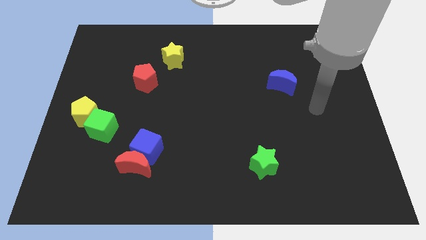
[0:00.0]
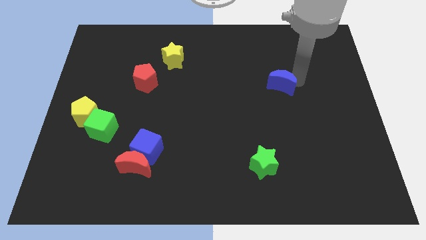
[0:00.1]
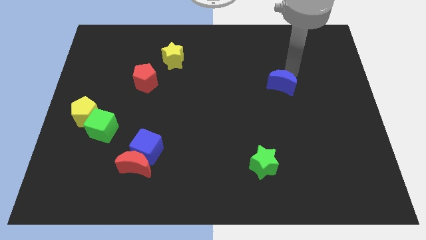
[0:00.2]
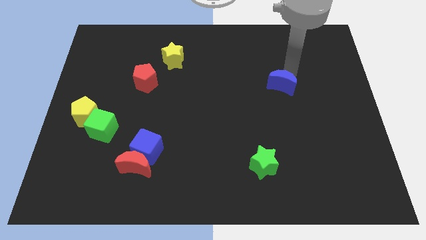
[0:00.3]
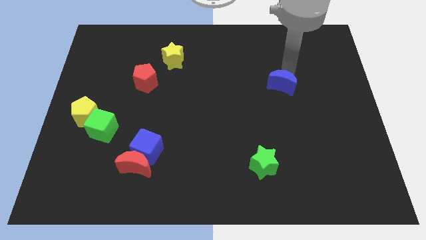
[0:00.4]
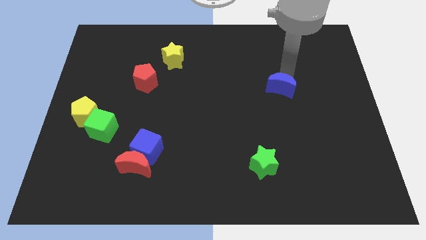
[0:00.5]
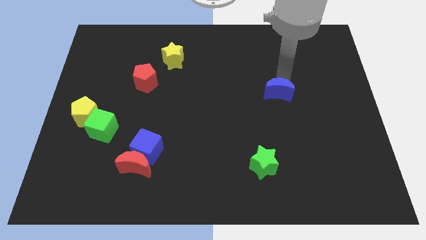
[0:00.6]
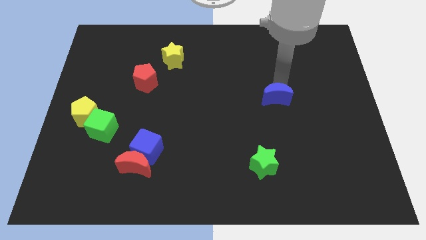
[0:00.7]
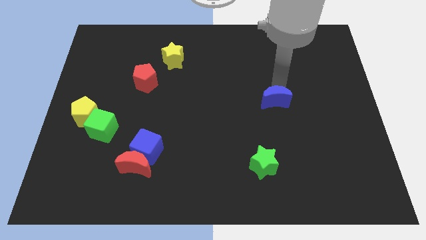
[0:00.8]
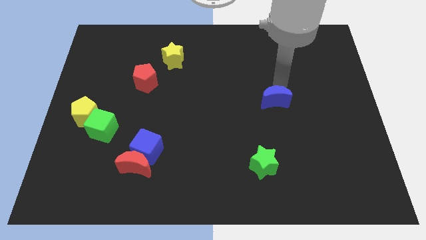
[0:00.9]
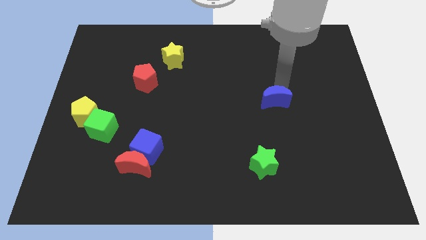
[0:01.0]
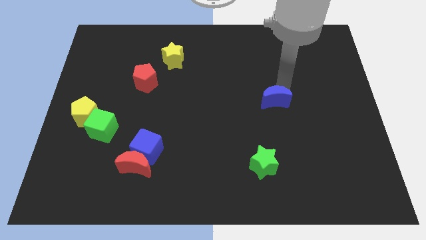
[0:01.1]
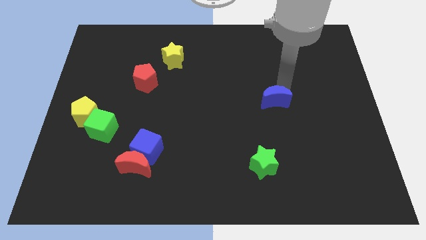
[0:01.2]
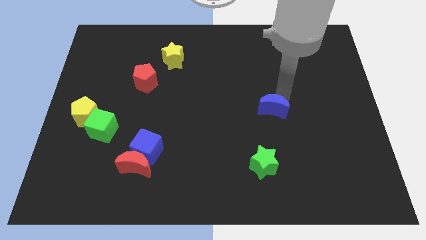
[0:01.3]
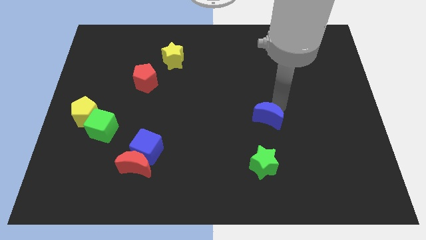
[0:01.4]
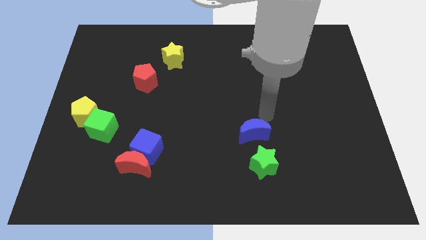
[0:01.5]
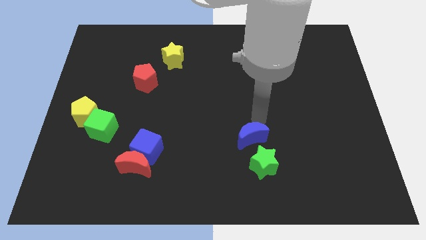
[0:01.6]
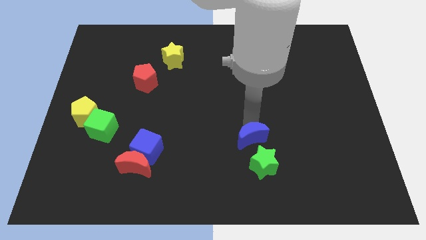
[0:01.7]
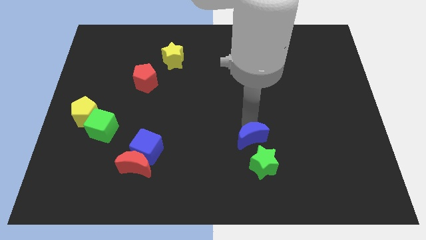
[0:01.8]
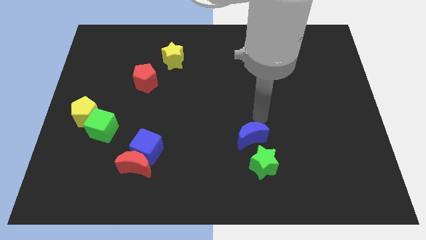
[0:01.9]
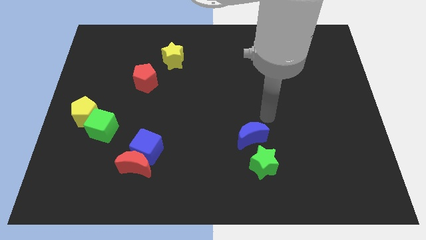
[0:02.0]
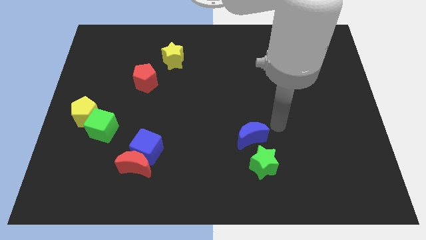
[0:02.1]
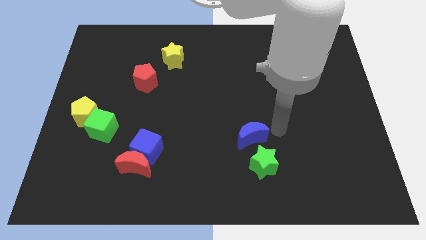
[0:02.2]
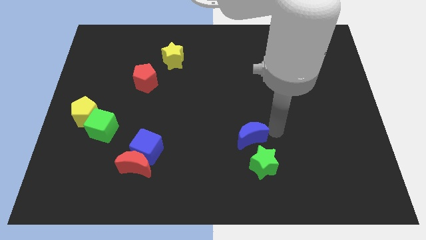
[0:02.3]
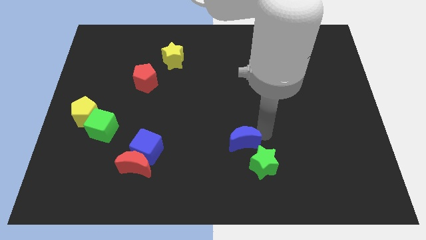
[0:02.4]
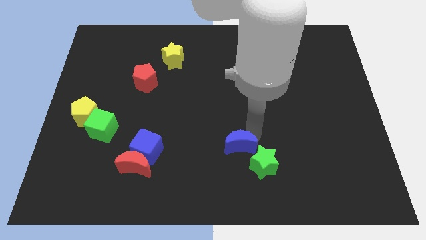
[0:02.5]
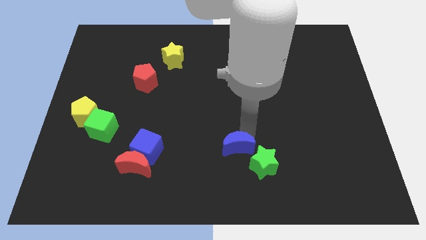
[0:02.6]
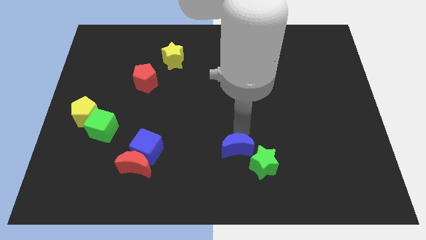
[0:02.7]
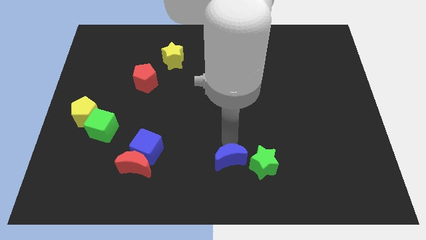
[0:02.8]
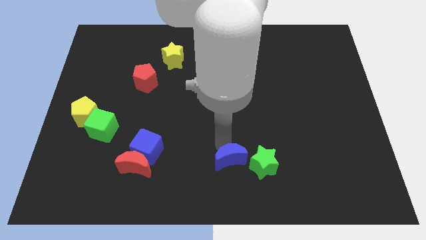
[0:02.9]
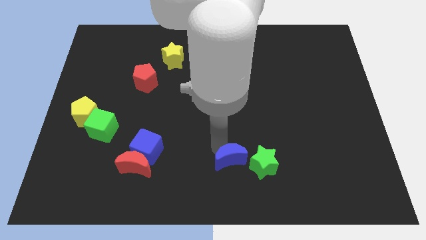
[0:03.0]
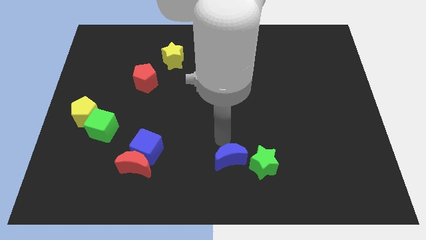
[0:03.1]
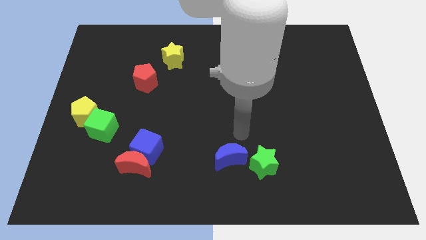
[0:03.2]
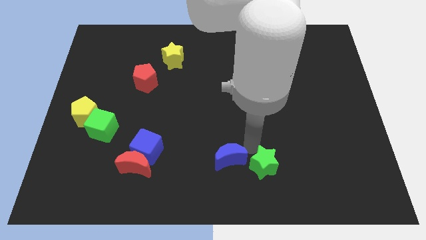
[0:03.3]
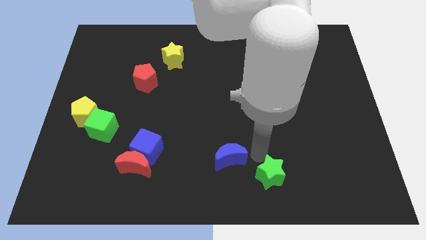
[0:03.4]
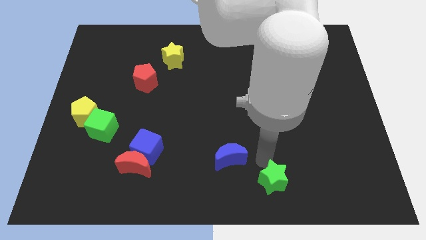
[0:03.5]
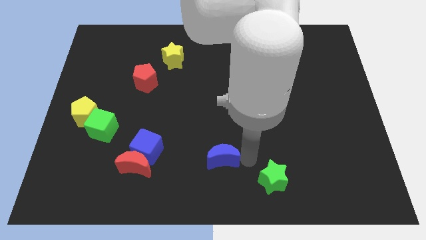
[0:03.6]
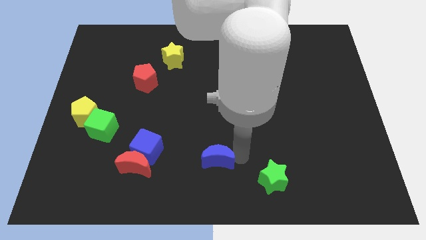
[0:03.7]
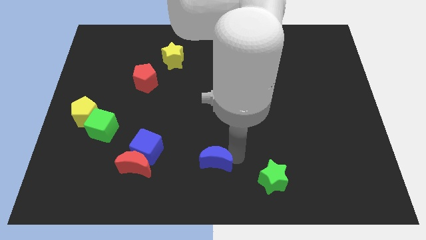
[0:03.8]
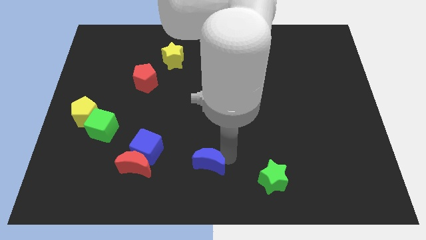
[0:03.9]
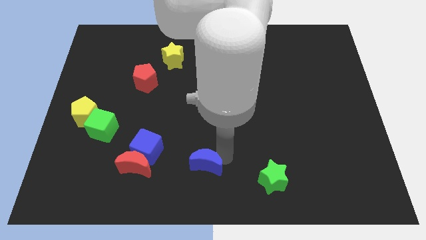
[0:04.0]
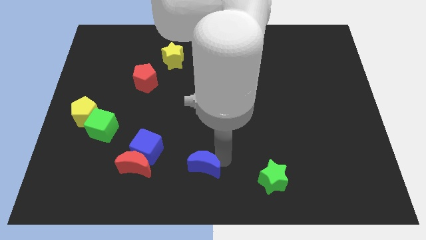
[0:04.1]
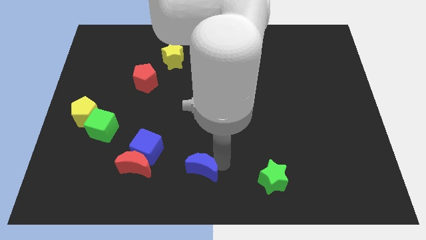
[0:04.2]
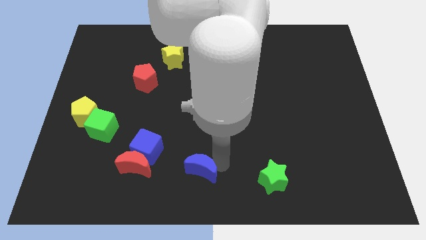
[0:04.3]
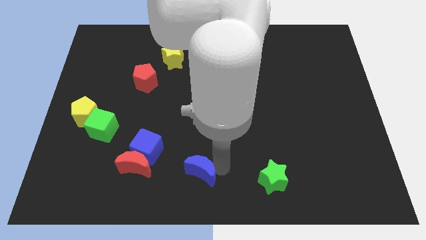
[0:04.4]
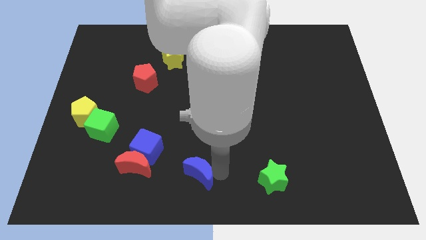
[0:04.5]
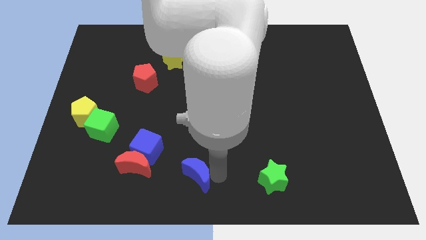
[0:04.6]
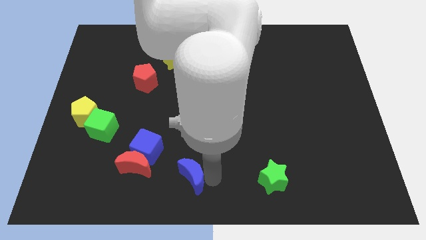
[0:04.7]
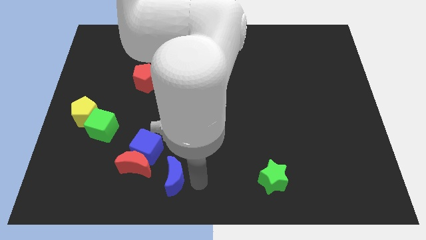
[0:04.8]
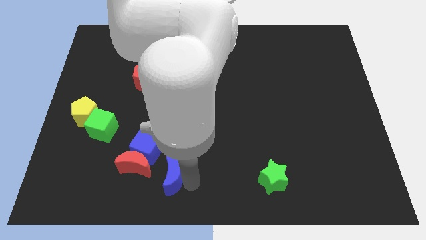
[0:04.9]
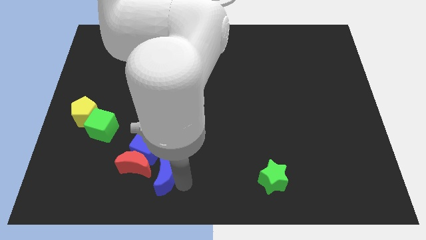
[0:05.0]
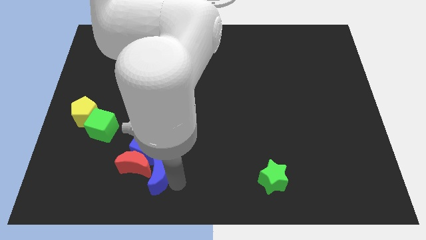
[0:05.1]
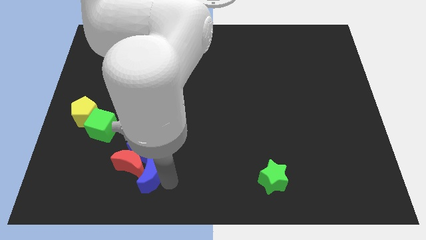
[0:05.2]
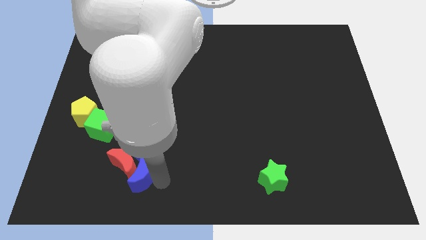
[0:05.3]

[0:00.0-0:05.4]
slide the blue moon towards the red moon

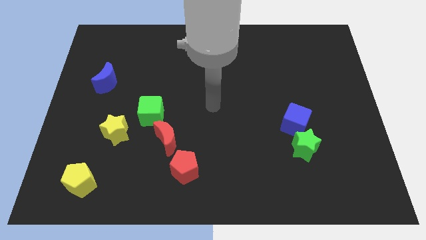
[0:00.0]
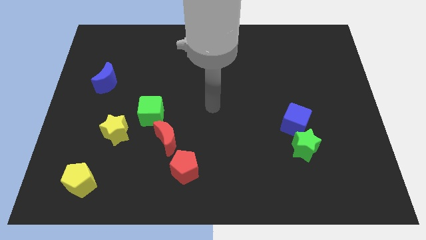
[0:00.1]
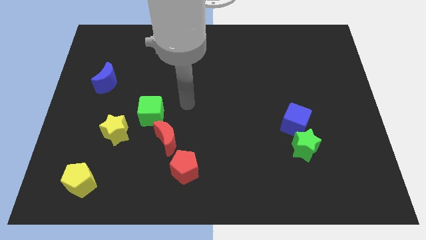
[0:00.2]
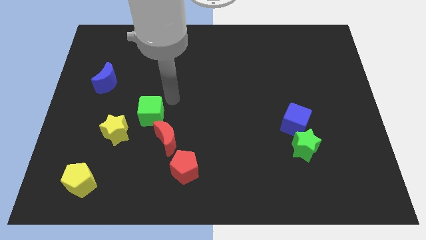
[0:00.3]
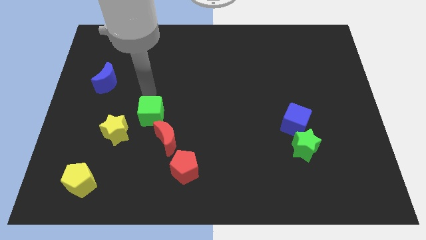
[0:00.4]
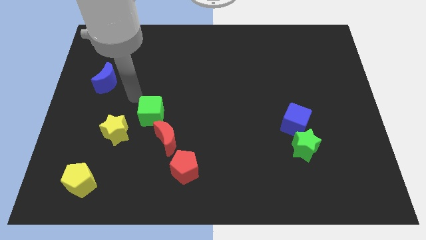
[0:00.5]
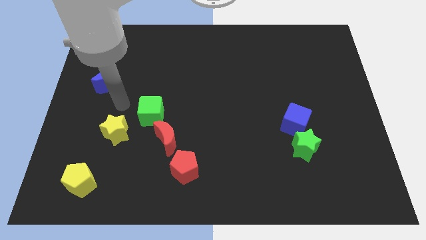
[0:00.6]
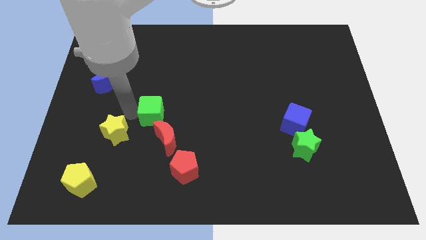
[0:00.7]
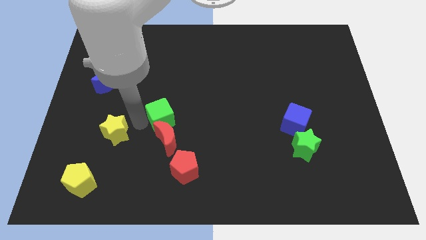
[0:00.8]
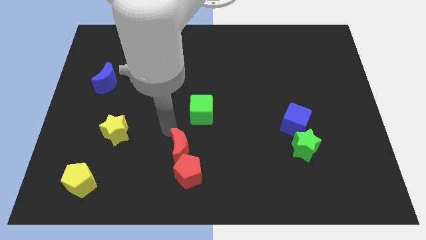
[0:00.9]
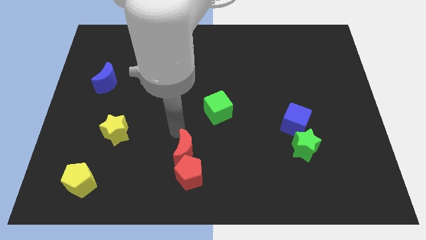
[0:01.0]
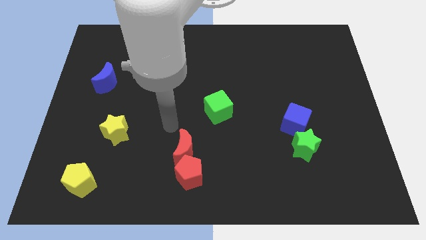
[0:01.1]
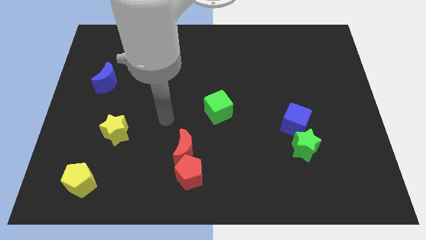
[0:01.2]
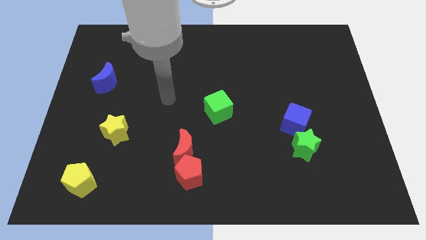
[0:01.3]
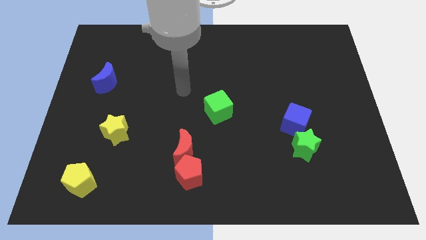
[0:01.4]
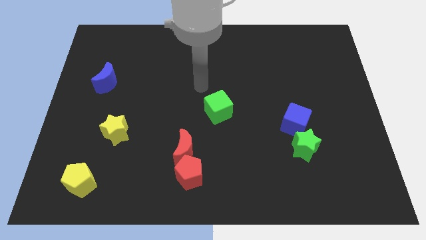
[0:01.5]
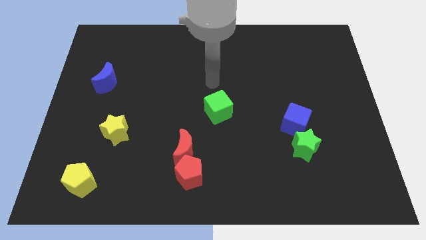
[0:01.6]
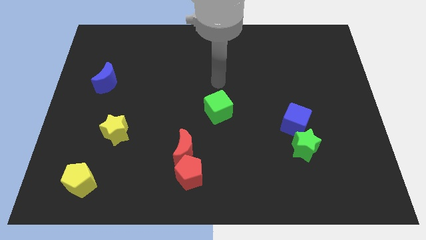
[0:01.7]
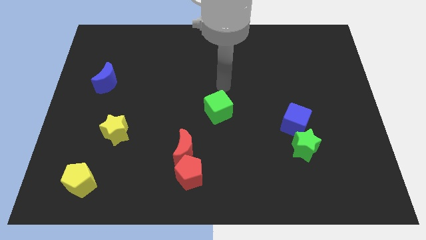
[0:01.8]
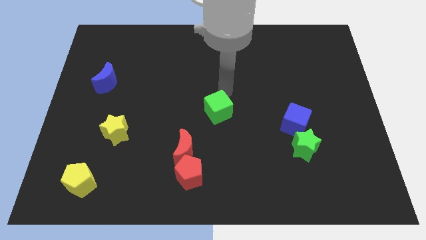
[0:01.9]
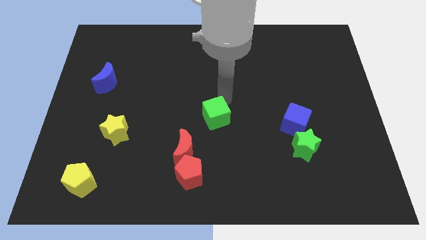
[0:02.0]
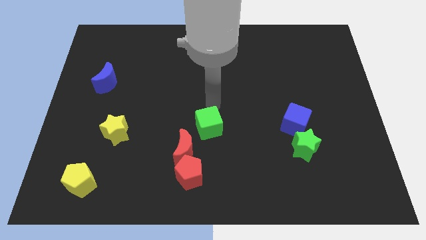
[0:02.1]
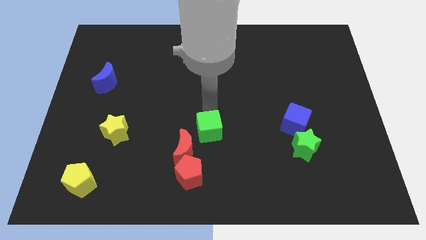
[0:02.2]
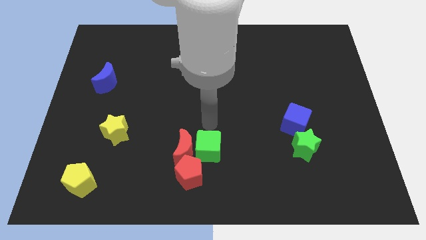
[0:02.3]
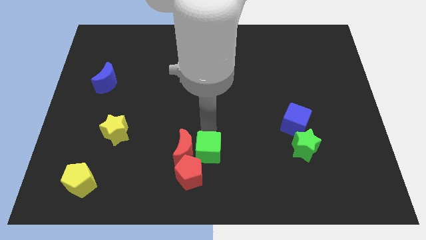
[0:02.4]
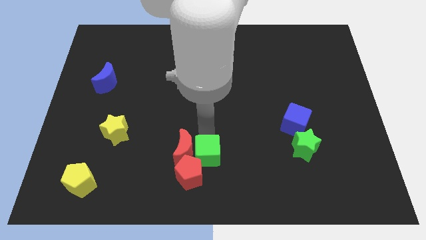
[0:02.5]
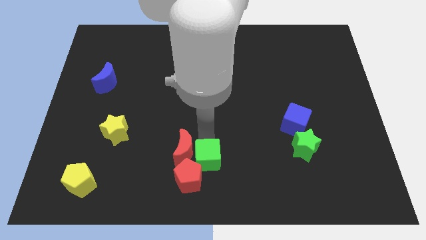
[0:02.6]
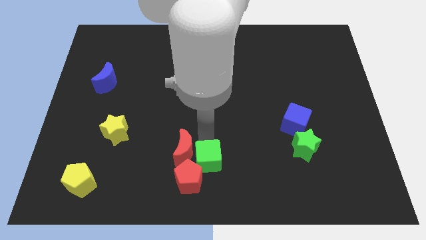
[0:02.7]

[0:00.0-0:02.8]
move the green cube close to the red pentagon

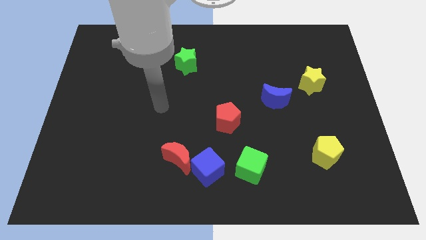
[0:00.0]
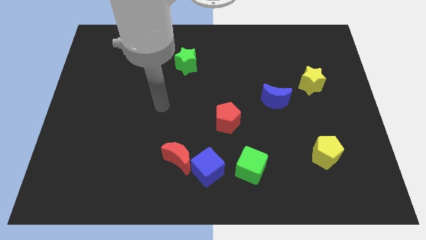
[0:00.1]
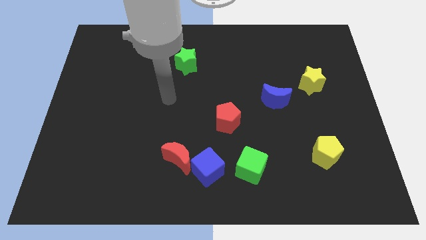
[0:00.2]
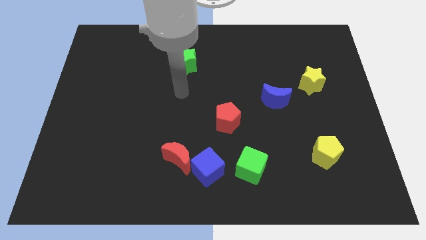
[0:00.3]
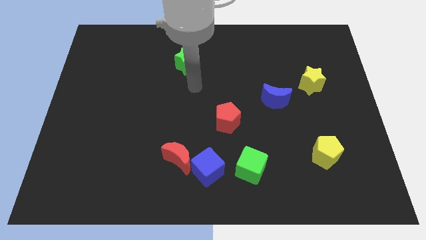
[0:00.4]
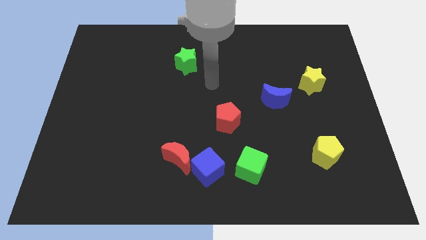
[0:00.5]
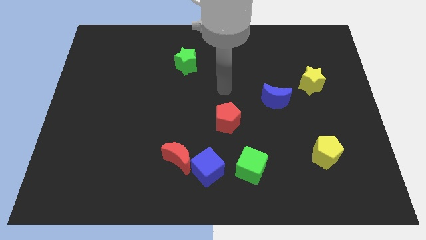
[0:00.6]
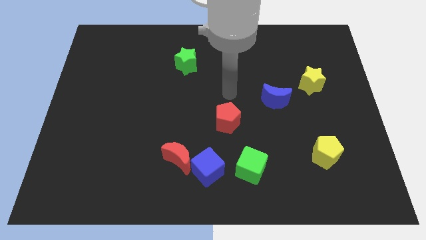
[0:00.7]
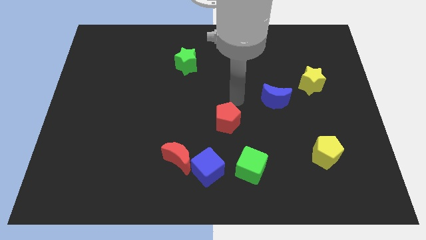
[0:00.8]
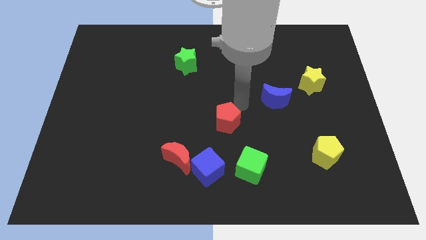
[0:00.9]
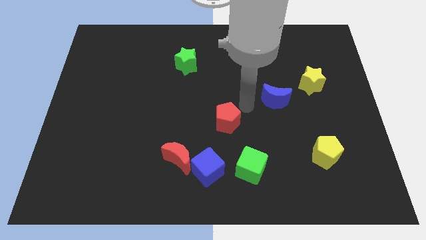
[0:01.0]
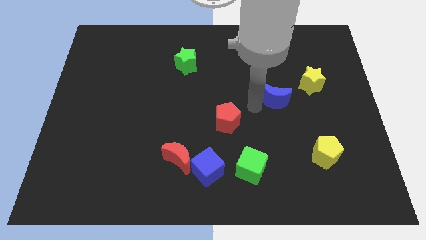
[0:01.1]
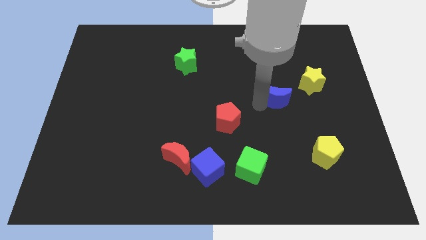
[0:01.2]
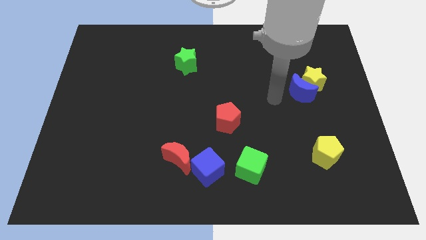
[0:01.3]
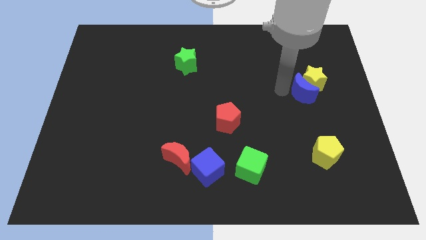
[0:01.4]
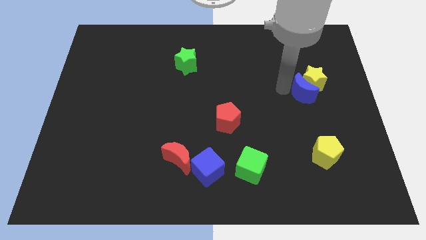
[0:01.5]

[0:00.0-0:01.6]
slide the blue moon next to the yellow star
